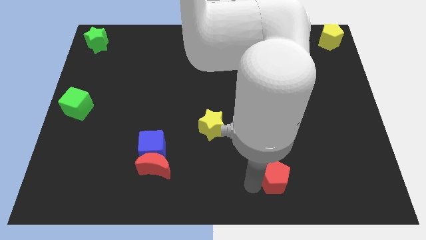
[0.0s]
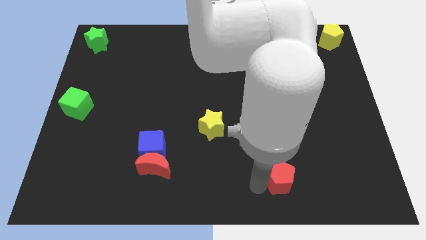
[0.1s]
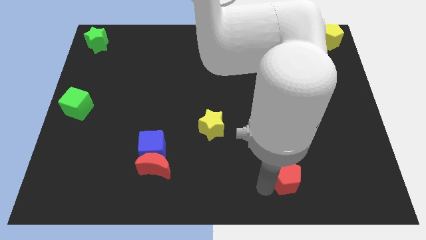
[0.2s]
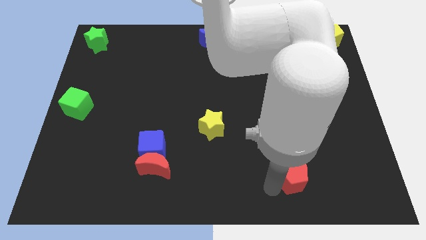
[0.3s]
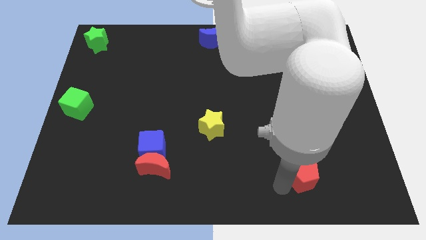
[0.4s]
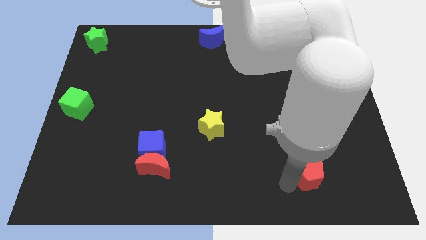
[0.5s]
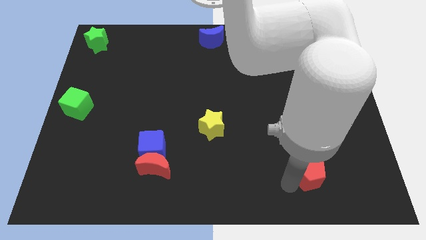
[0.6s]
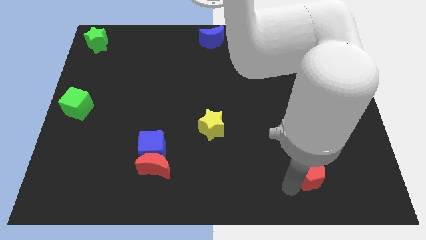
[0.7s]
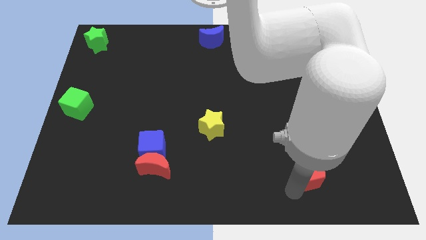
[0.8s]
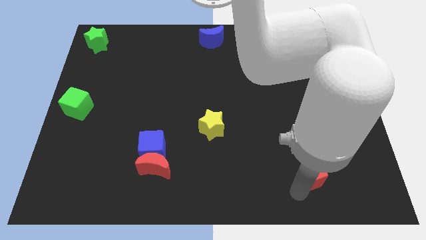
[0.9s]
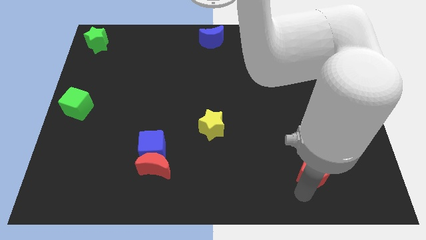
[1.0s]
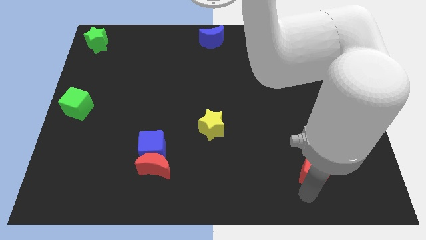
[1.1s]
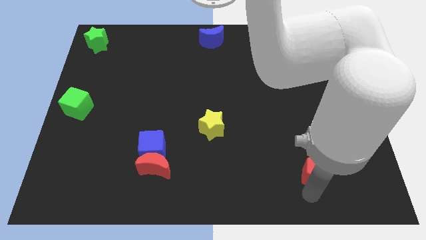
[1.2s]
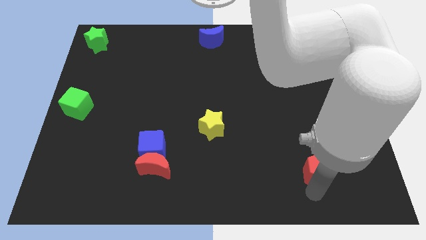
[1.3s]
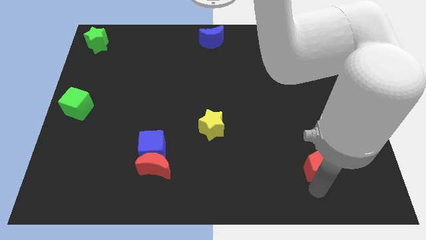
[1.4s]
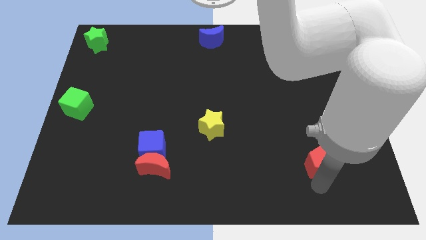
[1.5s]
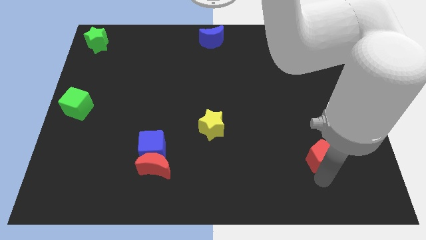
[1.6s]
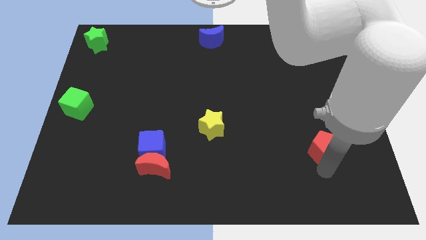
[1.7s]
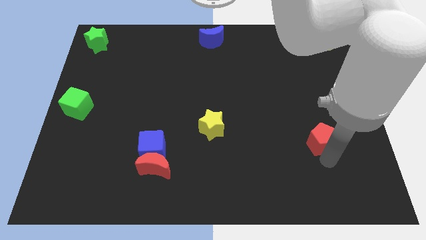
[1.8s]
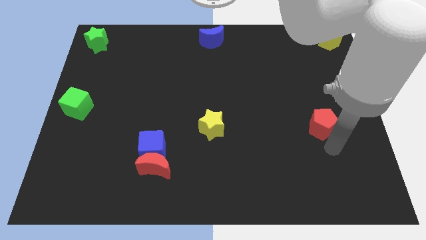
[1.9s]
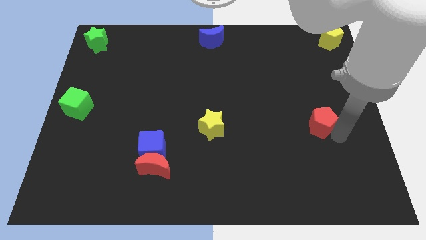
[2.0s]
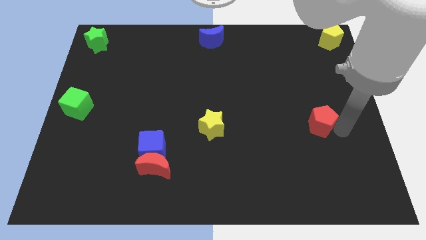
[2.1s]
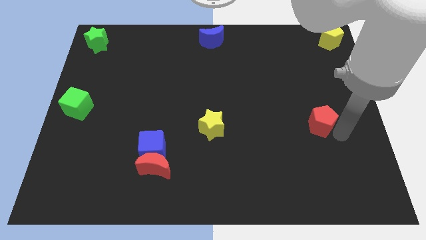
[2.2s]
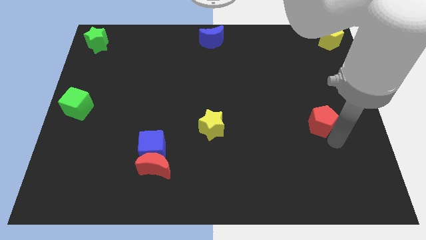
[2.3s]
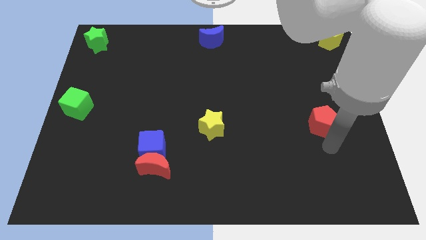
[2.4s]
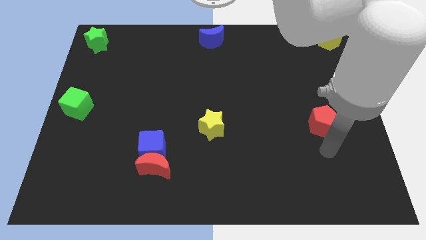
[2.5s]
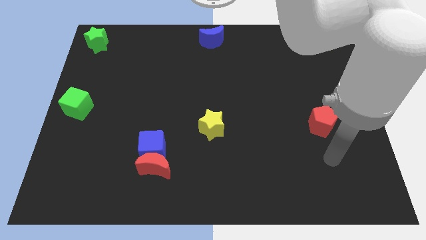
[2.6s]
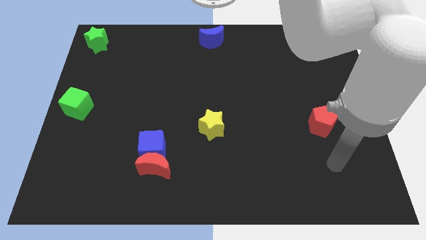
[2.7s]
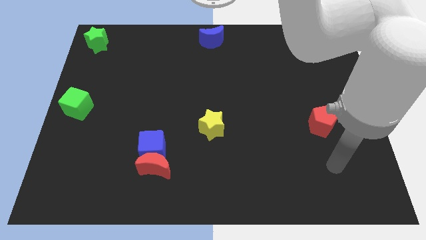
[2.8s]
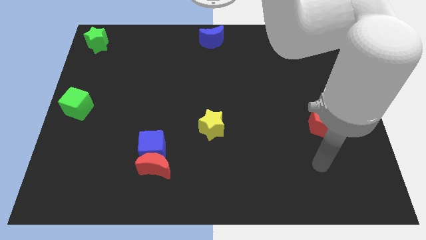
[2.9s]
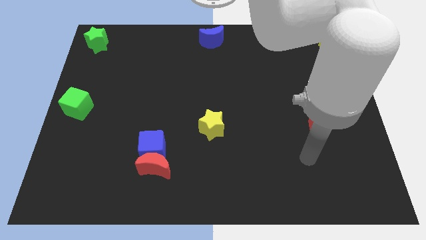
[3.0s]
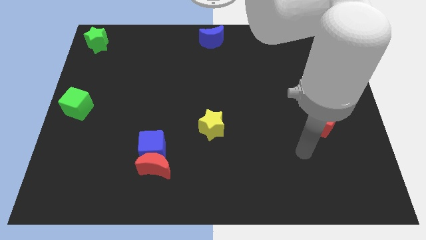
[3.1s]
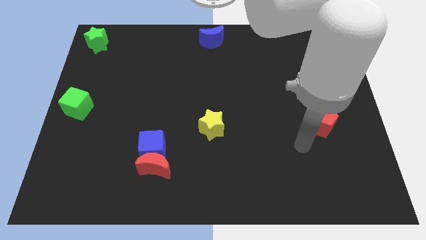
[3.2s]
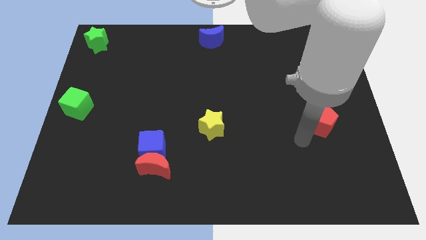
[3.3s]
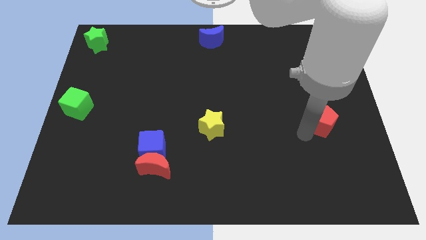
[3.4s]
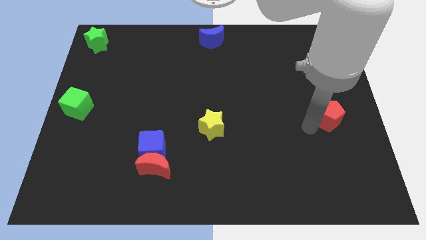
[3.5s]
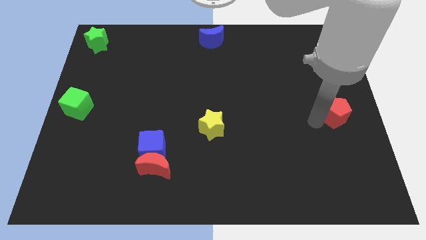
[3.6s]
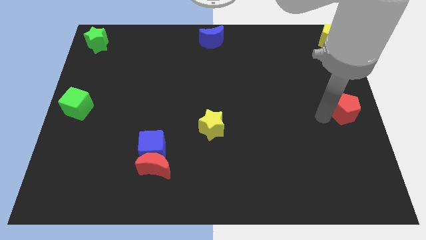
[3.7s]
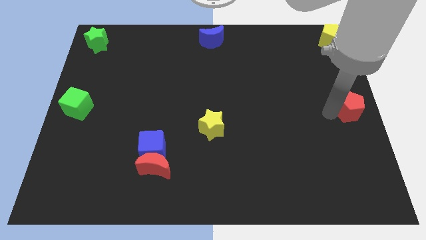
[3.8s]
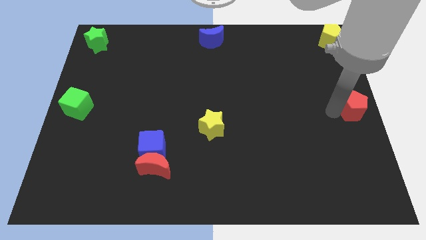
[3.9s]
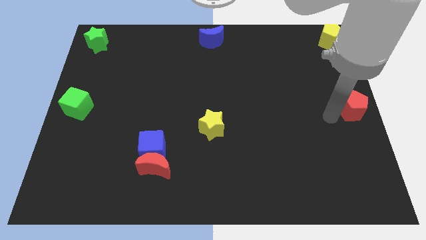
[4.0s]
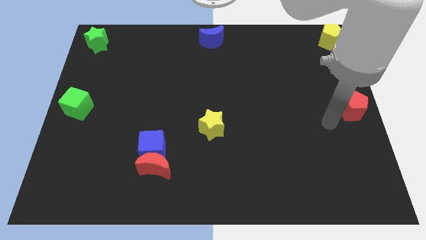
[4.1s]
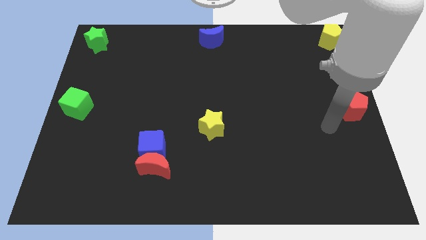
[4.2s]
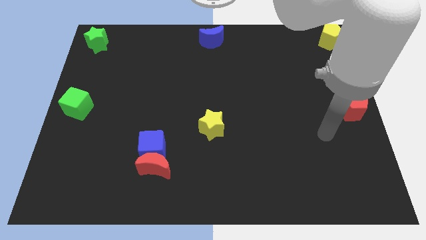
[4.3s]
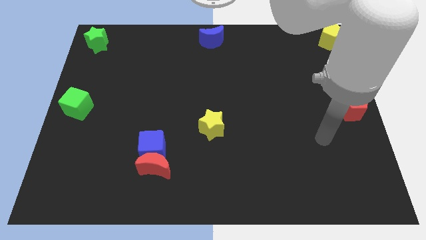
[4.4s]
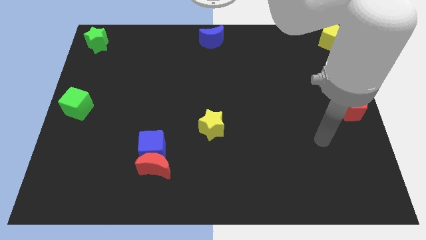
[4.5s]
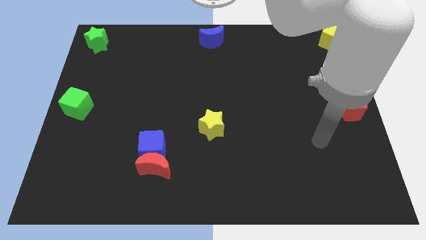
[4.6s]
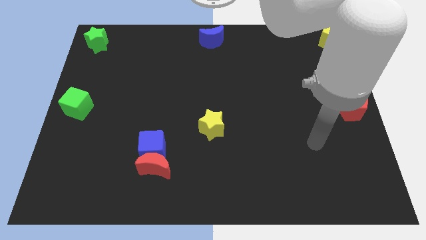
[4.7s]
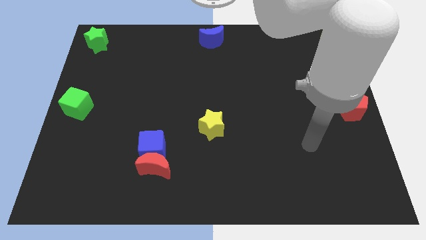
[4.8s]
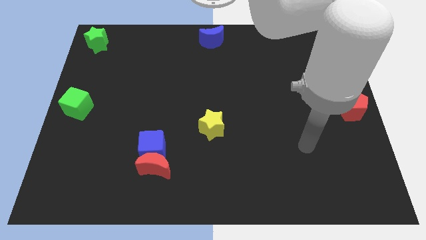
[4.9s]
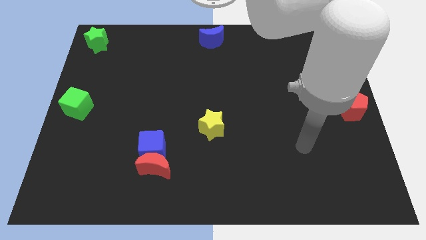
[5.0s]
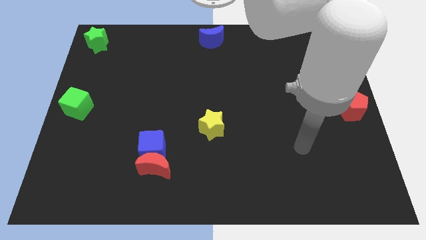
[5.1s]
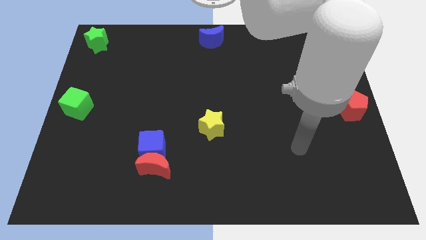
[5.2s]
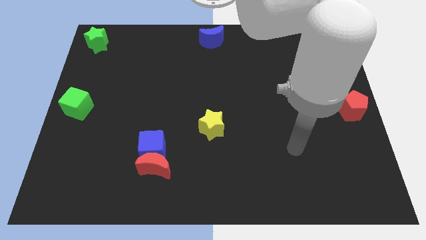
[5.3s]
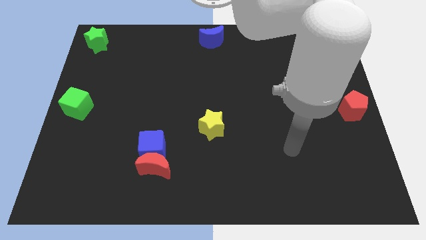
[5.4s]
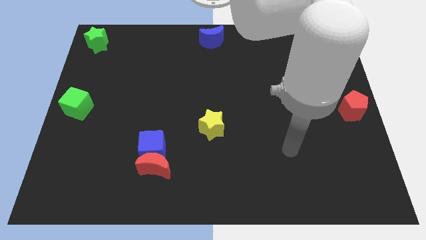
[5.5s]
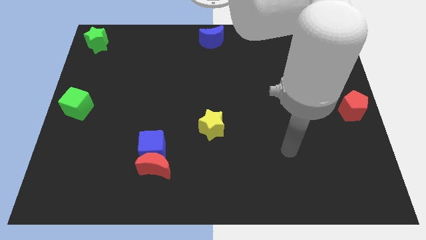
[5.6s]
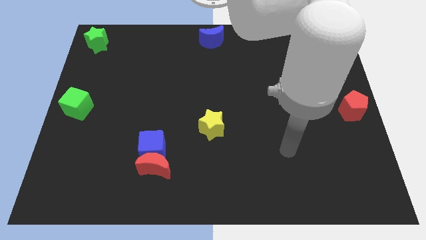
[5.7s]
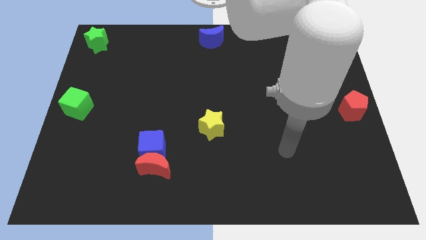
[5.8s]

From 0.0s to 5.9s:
place the red pentagon below the yellow pentagon

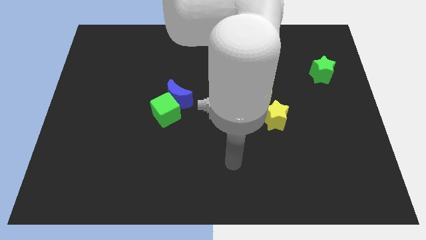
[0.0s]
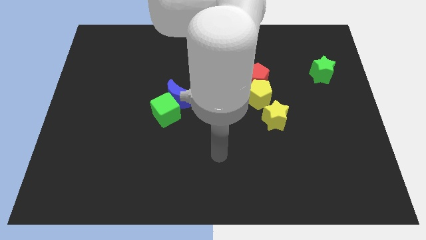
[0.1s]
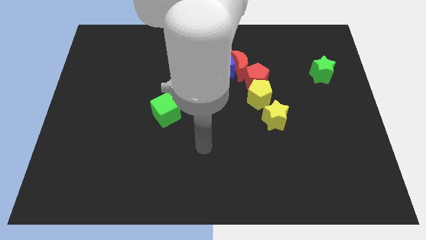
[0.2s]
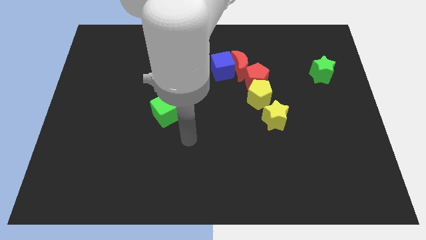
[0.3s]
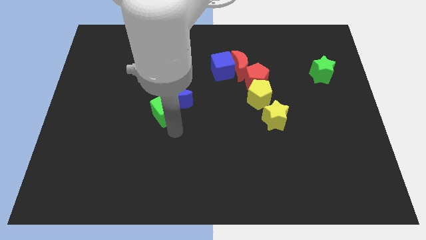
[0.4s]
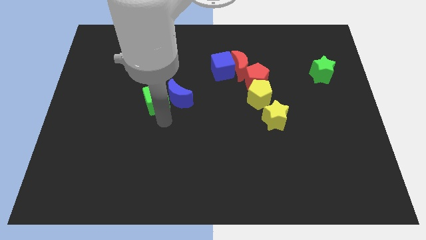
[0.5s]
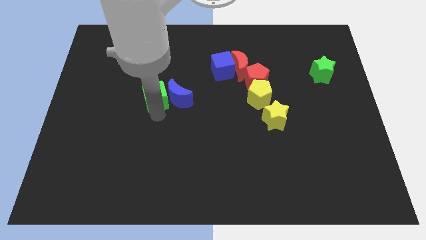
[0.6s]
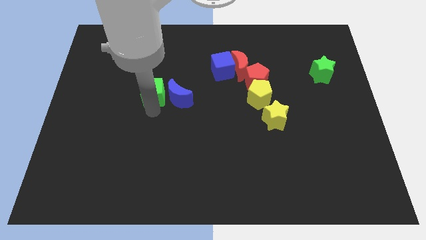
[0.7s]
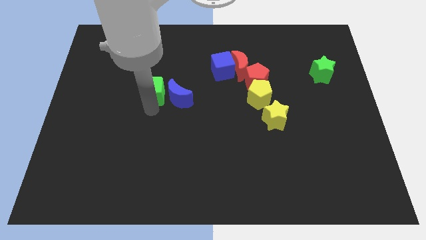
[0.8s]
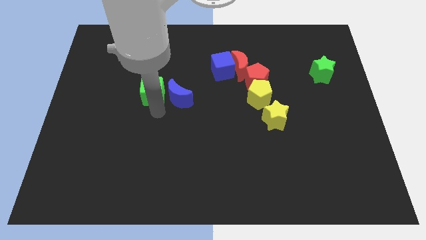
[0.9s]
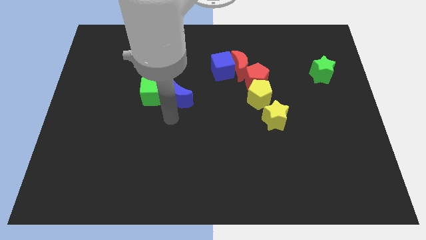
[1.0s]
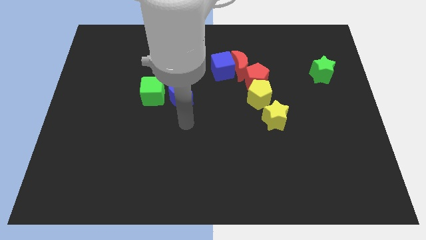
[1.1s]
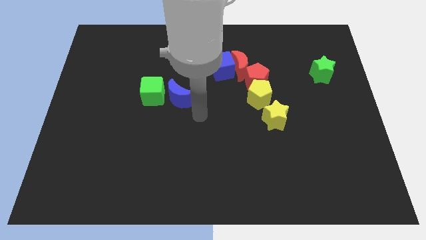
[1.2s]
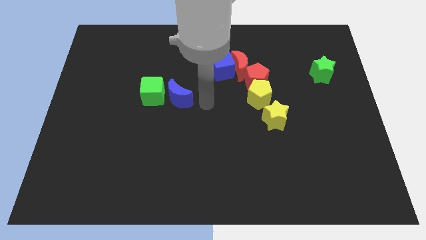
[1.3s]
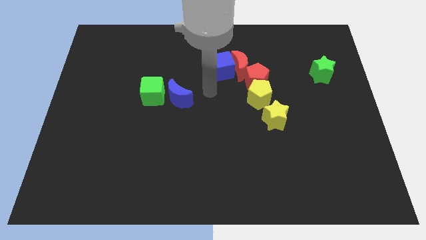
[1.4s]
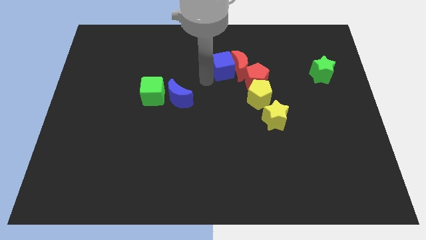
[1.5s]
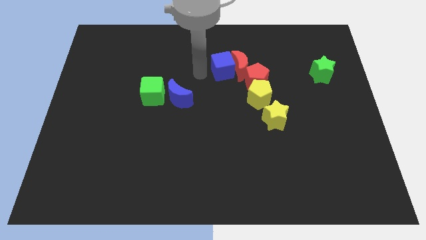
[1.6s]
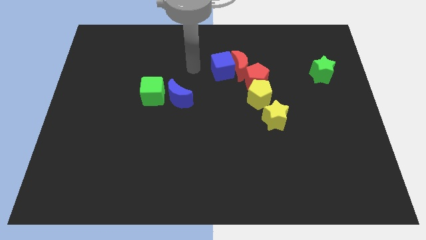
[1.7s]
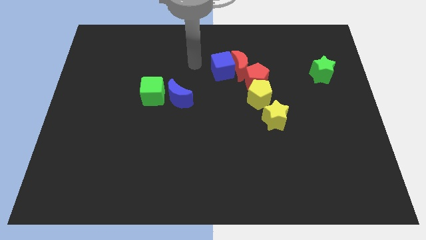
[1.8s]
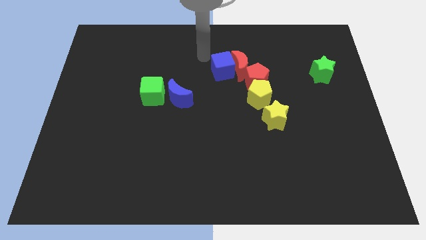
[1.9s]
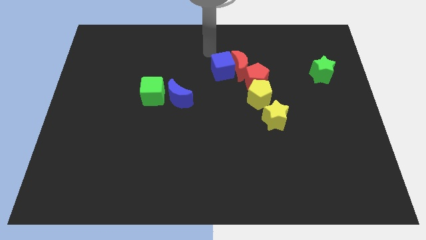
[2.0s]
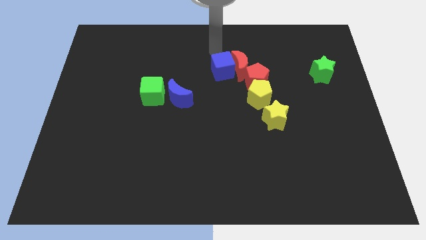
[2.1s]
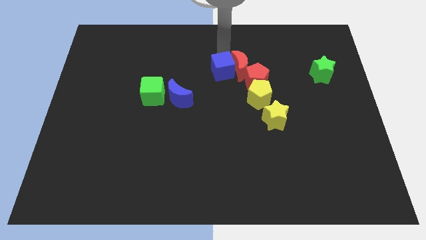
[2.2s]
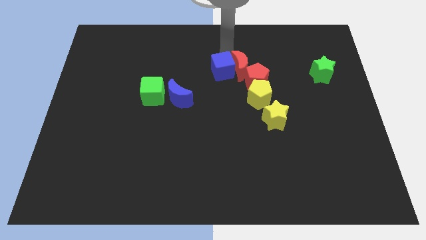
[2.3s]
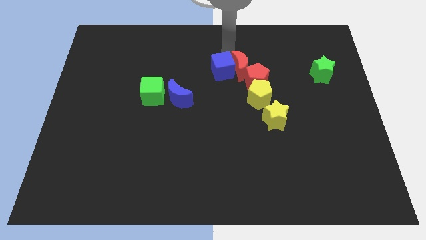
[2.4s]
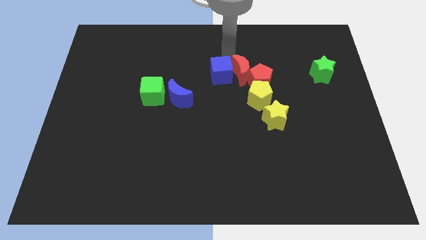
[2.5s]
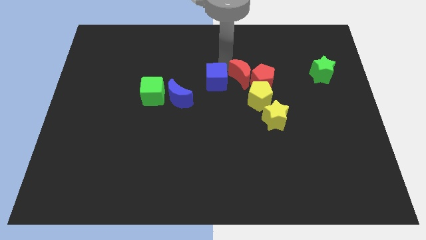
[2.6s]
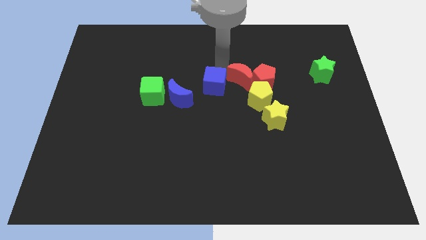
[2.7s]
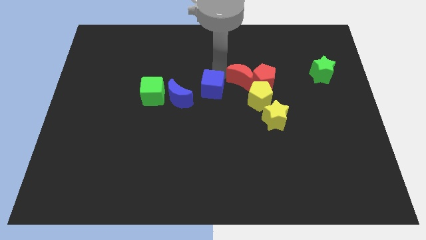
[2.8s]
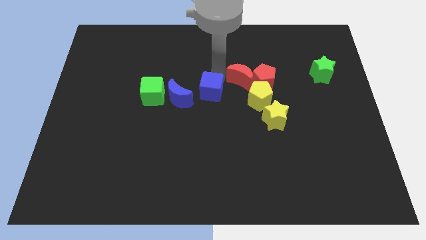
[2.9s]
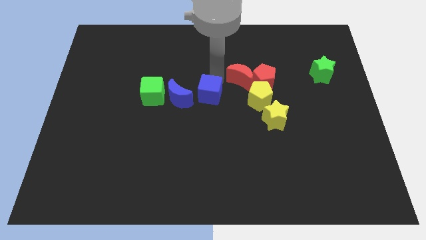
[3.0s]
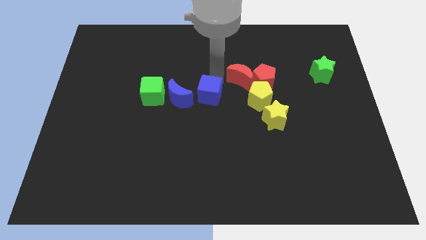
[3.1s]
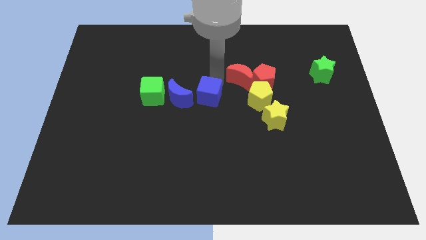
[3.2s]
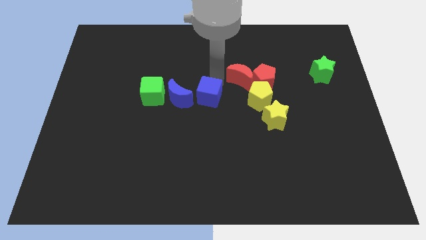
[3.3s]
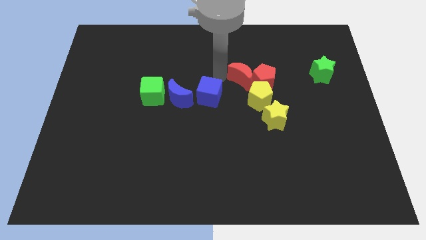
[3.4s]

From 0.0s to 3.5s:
push the blue cube to the right side of the blue moon
